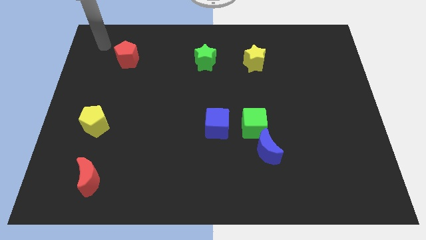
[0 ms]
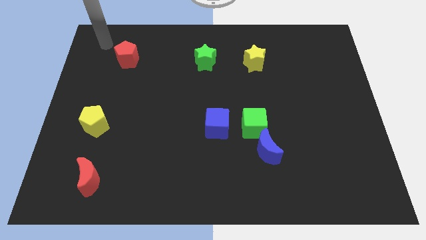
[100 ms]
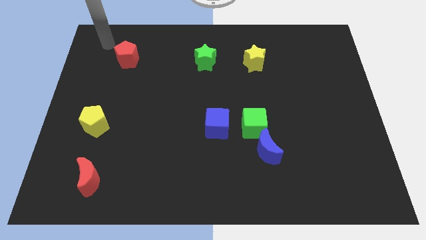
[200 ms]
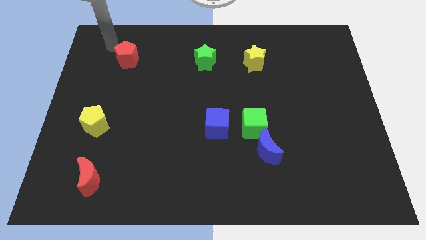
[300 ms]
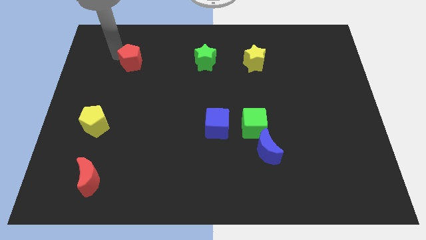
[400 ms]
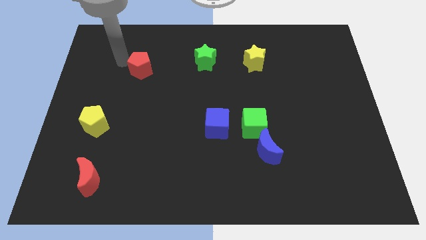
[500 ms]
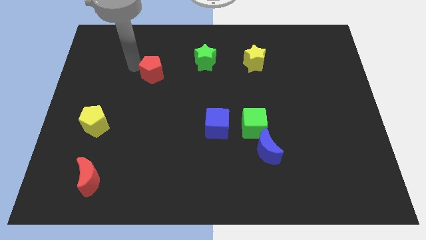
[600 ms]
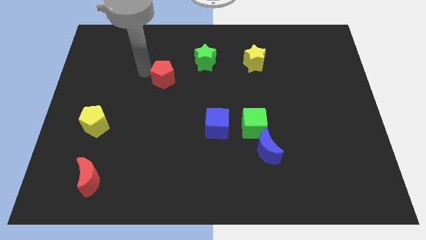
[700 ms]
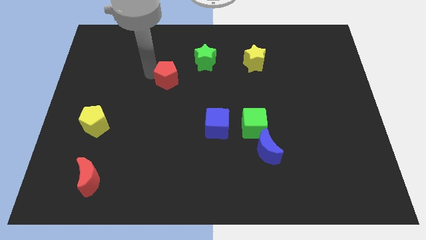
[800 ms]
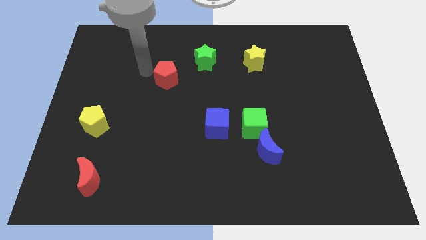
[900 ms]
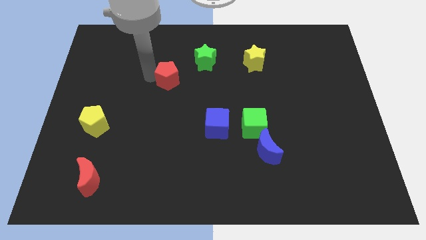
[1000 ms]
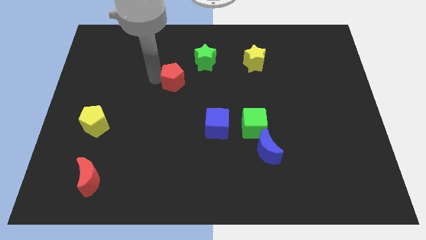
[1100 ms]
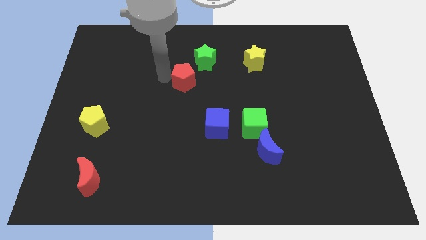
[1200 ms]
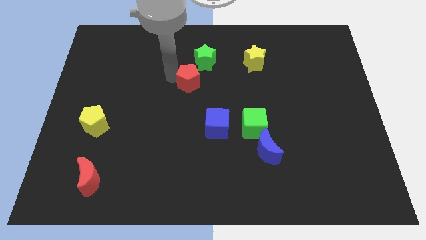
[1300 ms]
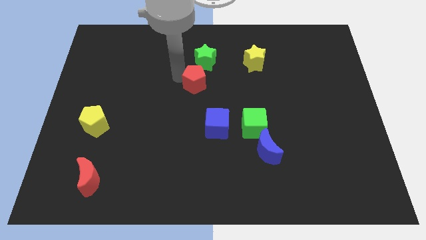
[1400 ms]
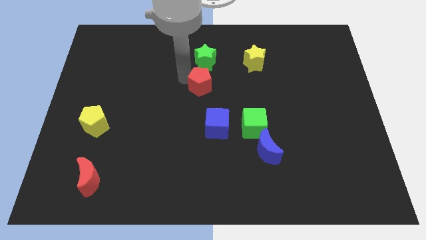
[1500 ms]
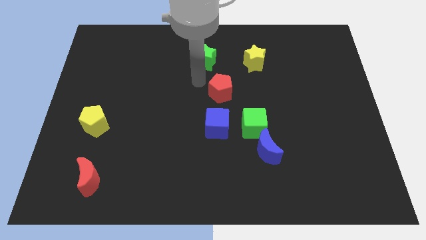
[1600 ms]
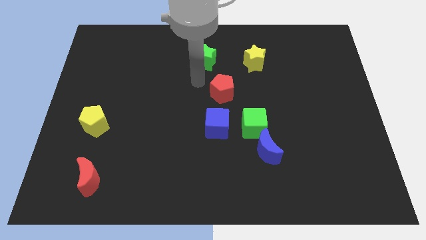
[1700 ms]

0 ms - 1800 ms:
place the red pentagon at the center of the board

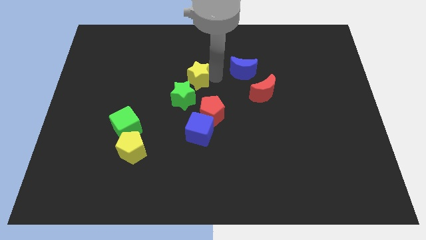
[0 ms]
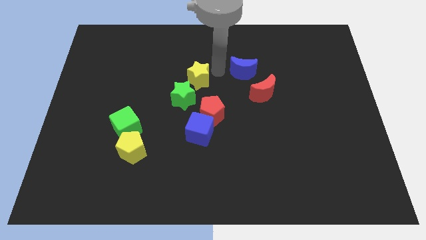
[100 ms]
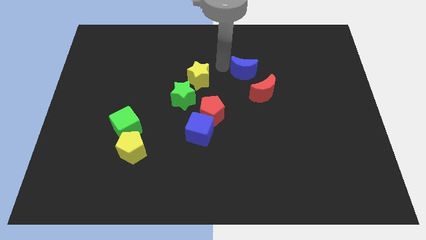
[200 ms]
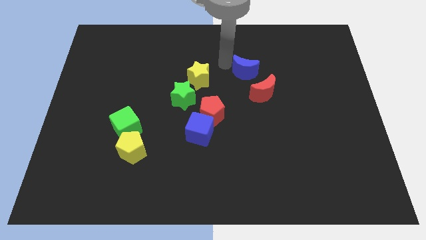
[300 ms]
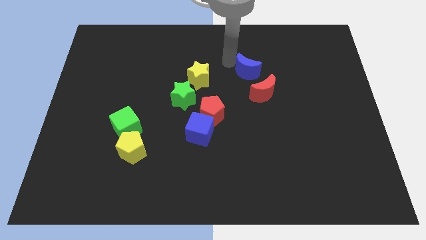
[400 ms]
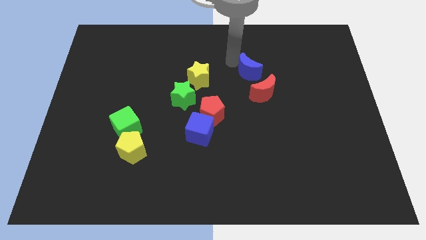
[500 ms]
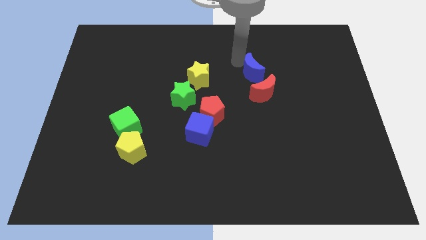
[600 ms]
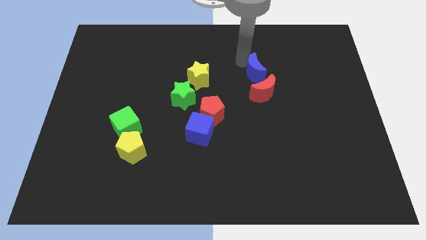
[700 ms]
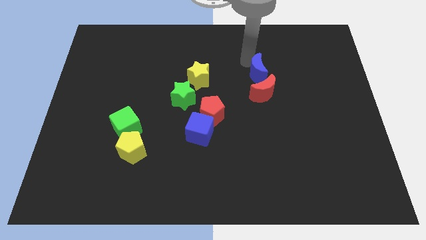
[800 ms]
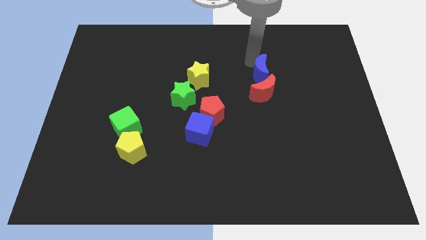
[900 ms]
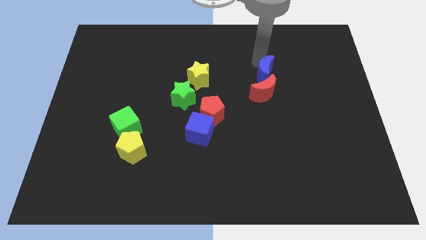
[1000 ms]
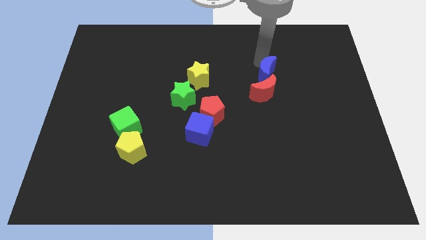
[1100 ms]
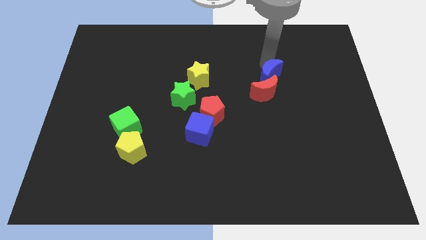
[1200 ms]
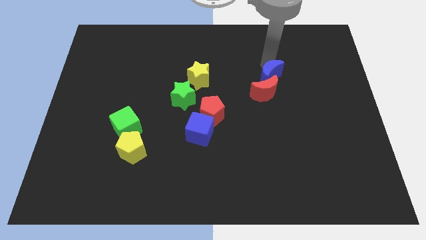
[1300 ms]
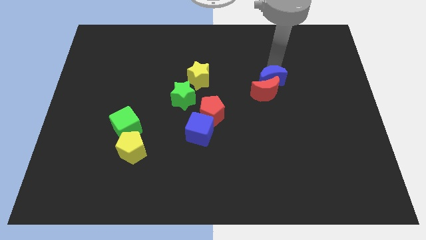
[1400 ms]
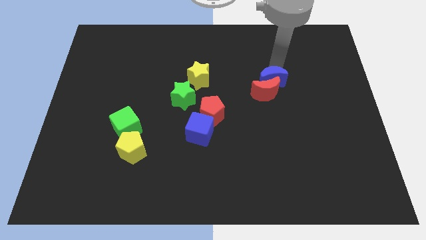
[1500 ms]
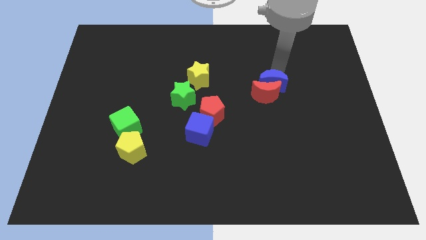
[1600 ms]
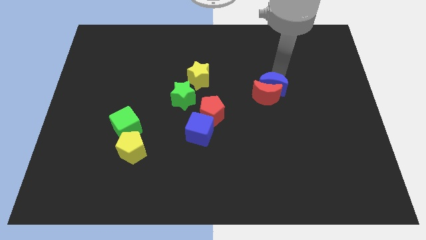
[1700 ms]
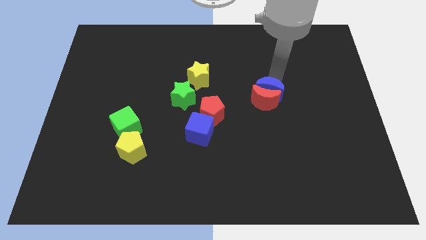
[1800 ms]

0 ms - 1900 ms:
push the blue crescent into the red crescent

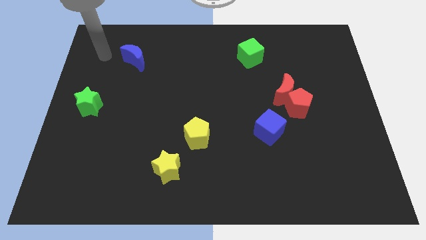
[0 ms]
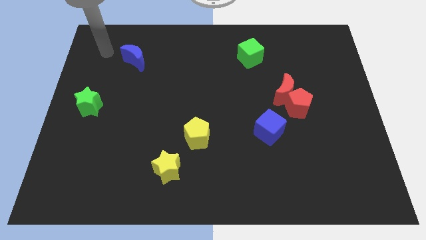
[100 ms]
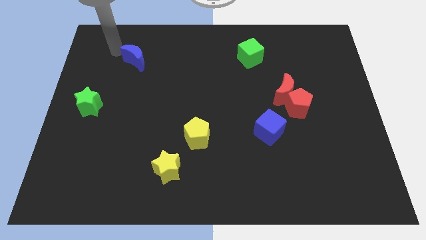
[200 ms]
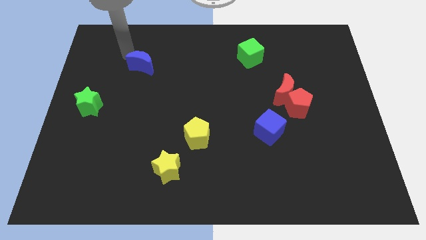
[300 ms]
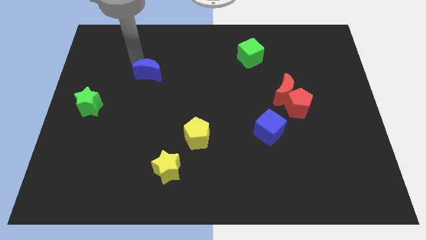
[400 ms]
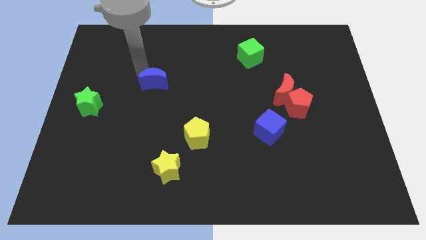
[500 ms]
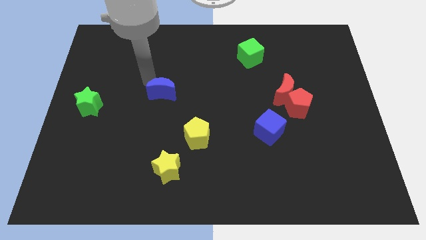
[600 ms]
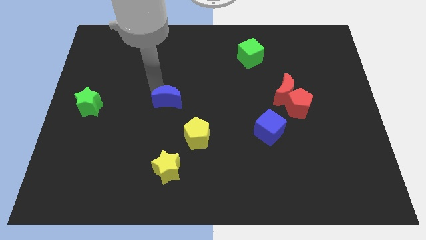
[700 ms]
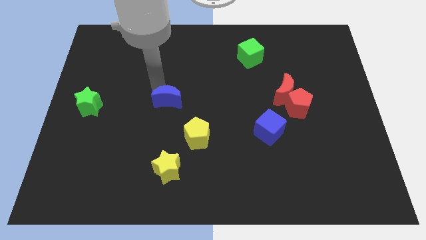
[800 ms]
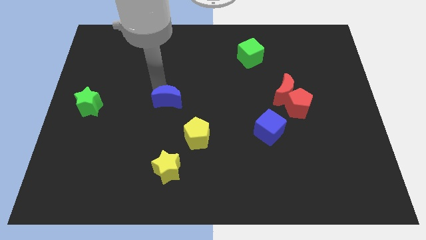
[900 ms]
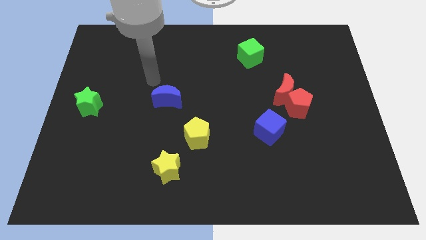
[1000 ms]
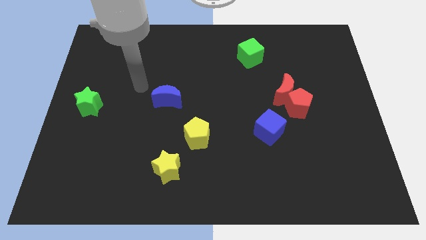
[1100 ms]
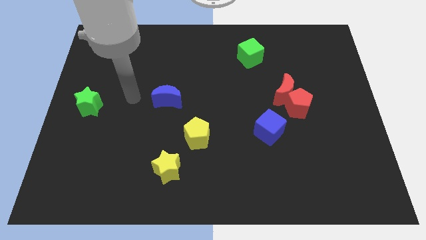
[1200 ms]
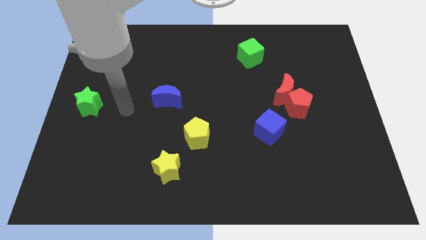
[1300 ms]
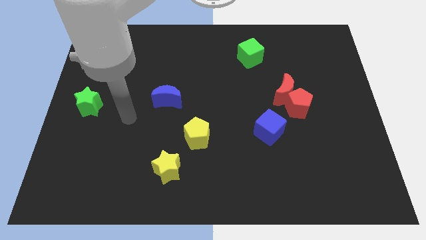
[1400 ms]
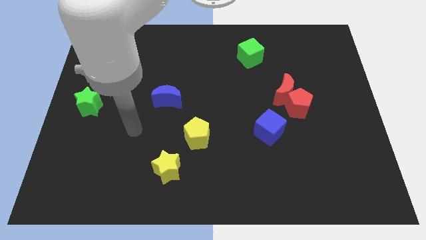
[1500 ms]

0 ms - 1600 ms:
place the blue moon to the right of the green star

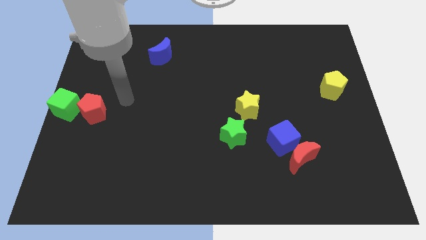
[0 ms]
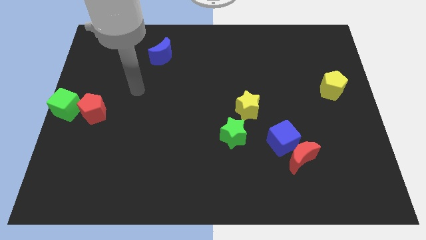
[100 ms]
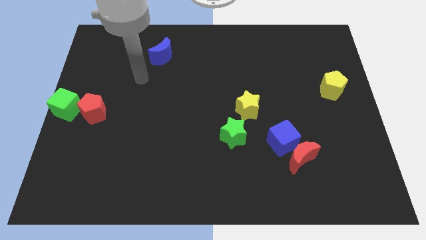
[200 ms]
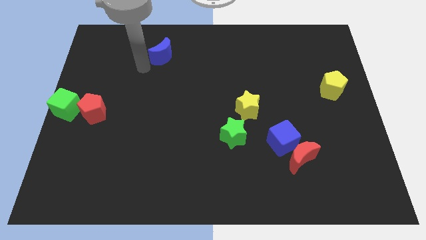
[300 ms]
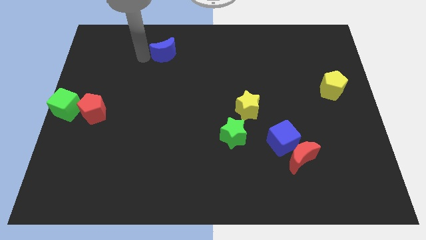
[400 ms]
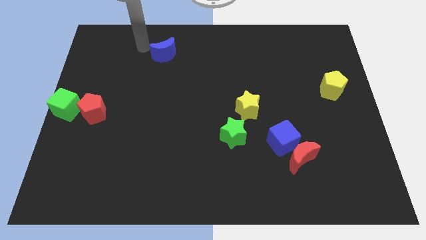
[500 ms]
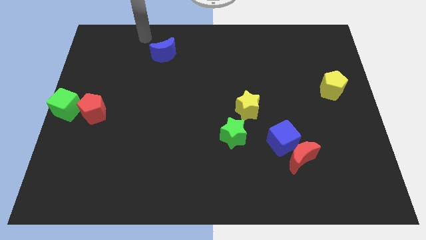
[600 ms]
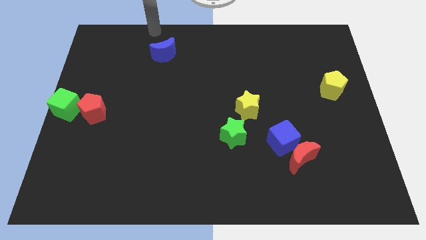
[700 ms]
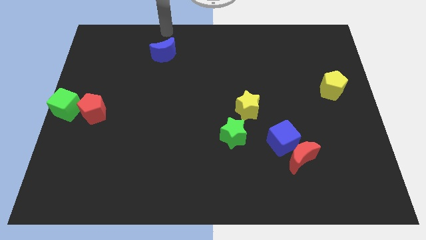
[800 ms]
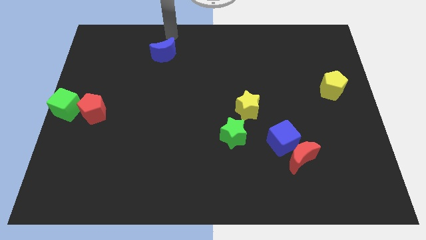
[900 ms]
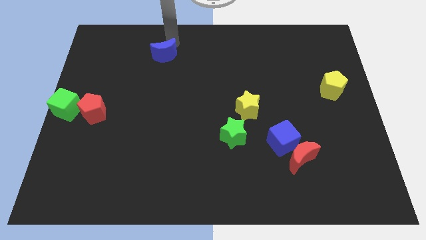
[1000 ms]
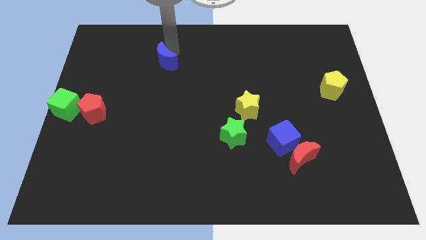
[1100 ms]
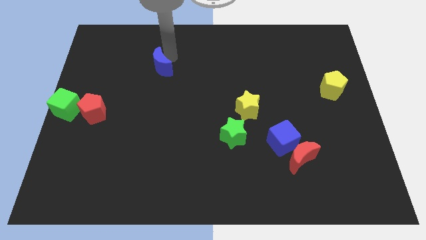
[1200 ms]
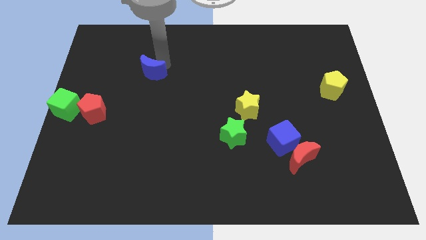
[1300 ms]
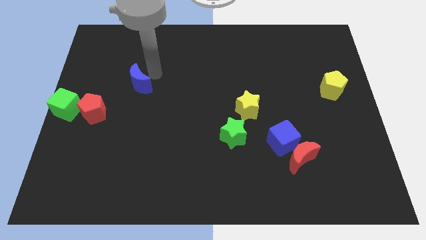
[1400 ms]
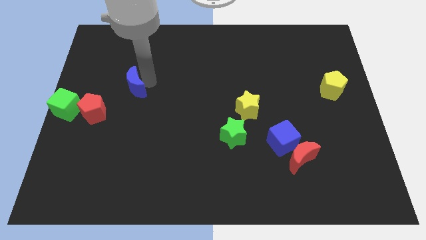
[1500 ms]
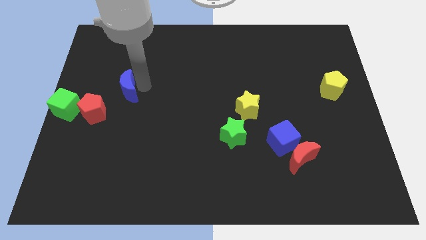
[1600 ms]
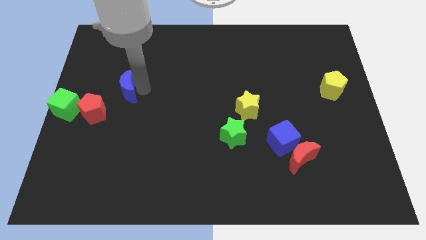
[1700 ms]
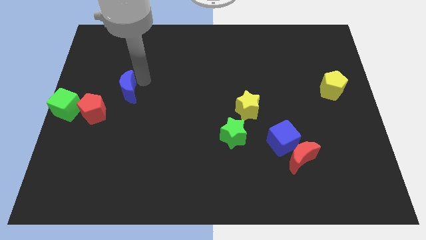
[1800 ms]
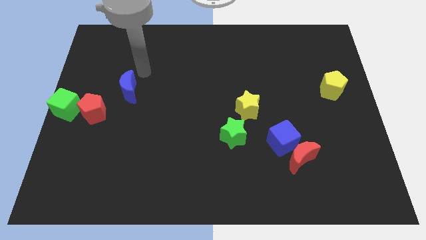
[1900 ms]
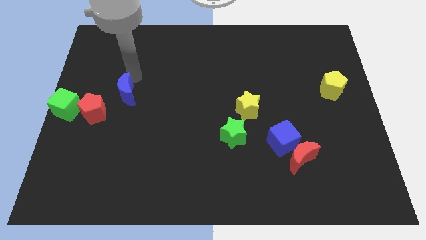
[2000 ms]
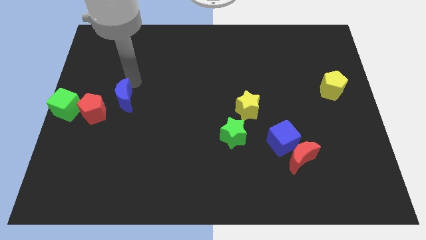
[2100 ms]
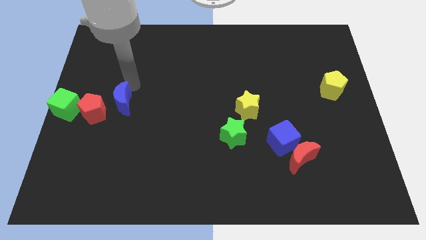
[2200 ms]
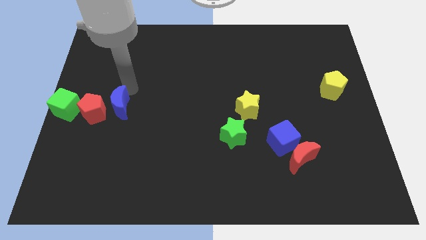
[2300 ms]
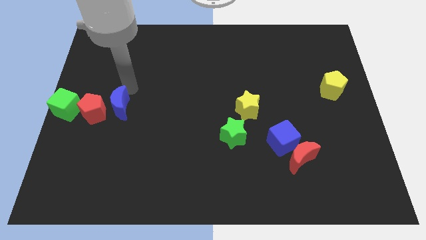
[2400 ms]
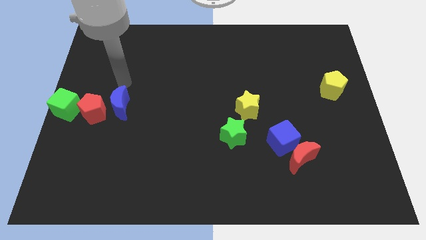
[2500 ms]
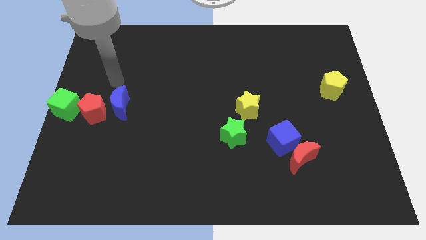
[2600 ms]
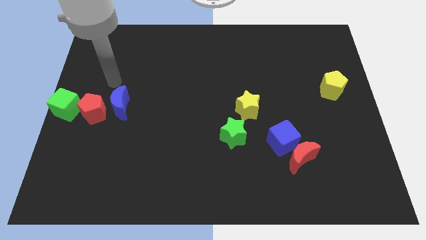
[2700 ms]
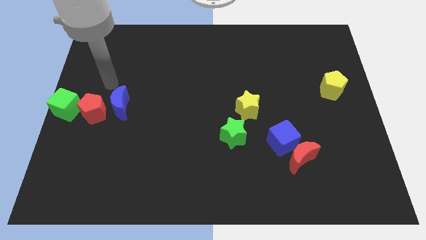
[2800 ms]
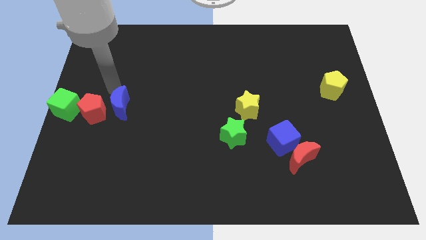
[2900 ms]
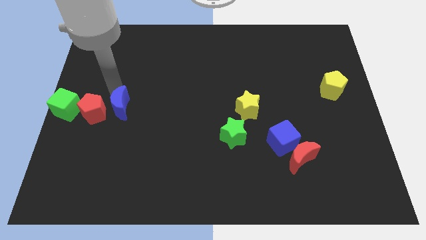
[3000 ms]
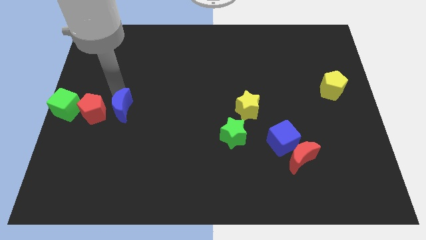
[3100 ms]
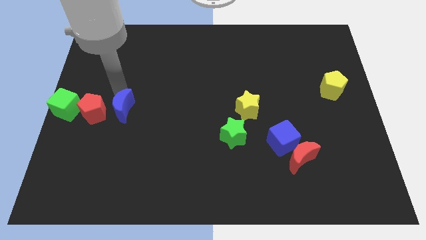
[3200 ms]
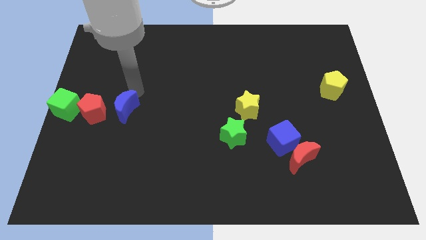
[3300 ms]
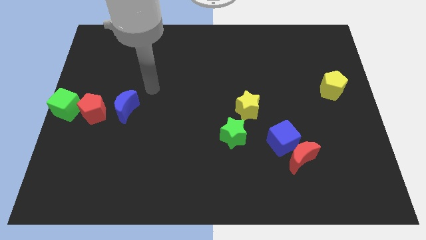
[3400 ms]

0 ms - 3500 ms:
place the blue moon to the right of the red pentagon

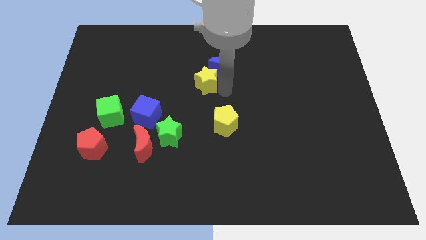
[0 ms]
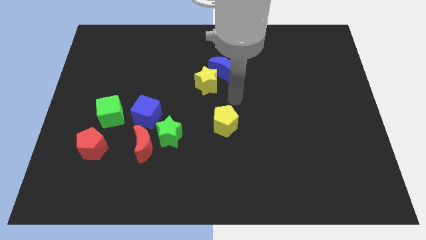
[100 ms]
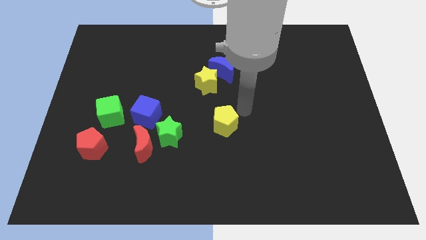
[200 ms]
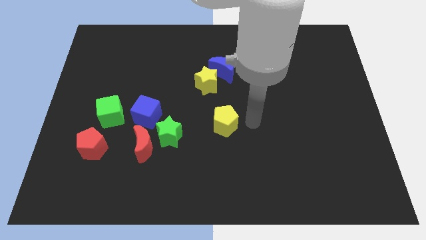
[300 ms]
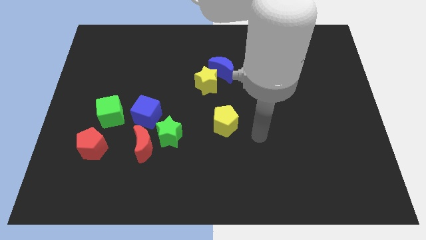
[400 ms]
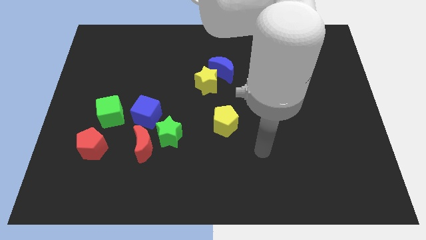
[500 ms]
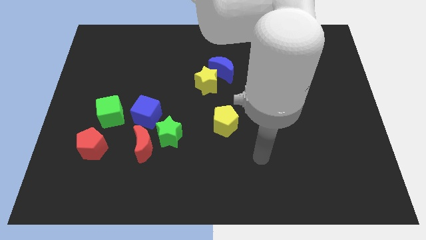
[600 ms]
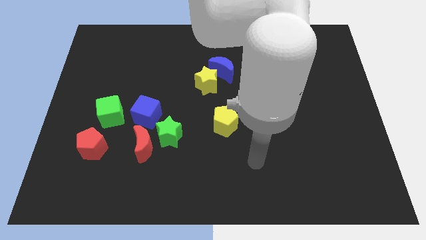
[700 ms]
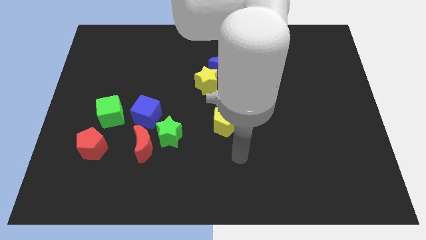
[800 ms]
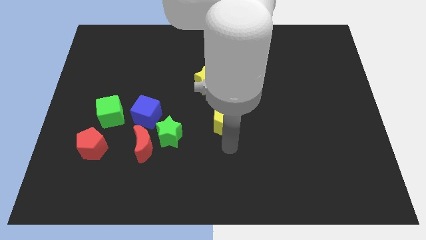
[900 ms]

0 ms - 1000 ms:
move your arm away from the yellow star
